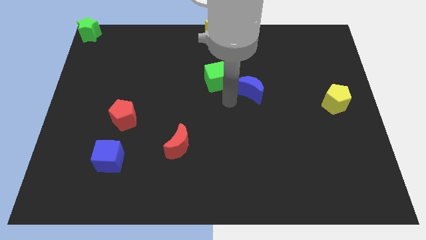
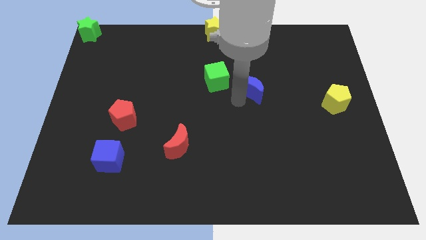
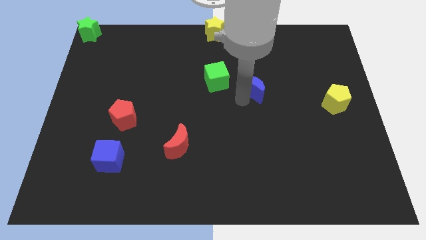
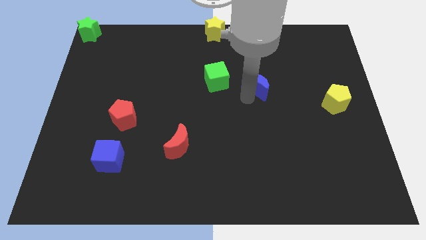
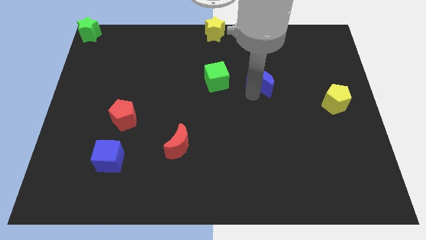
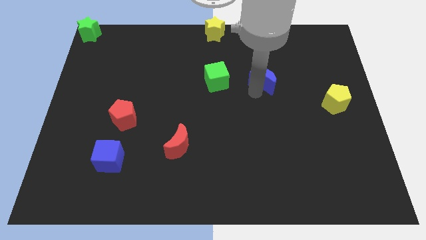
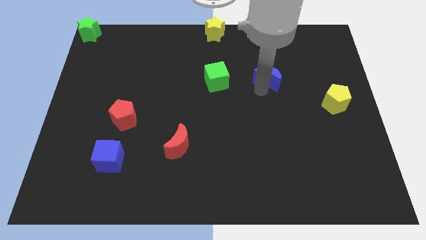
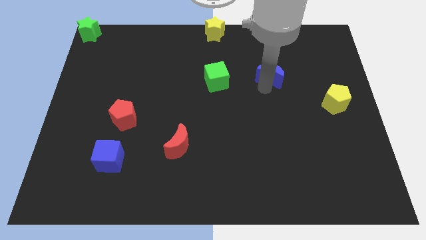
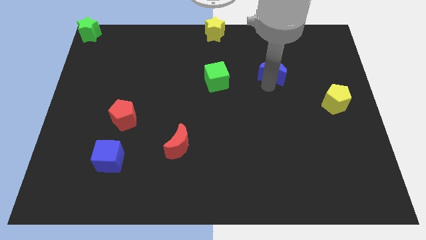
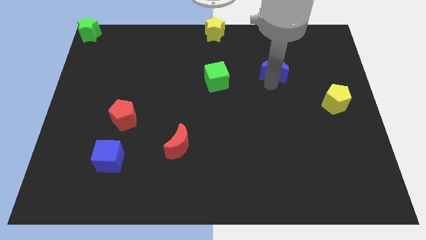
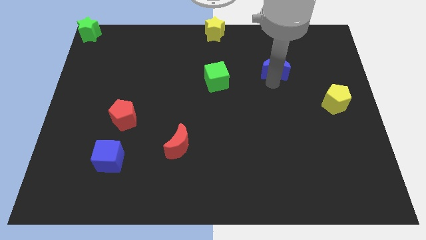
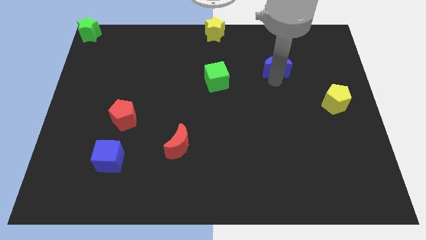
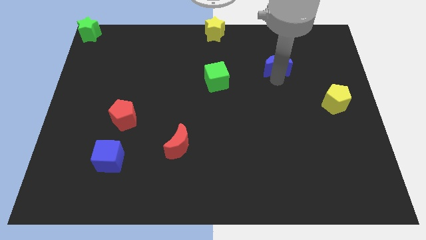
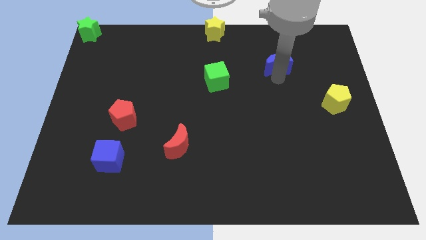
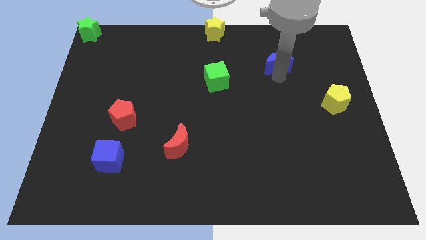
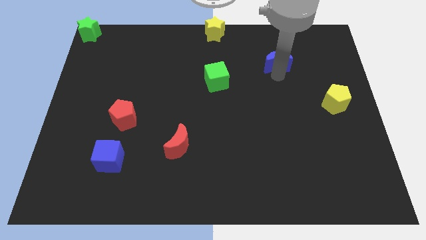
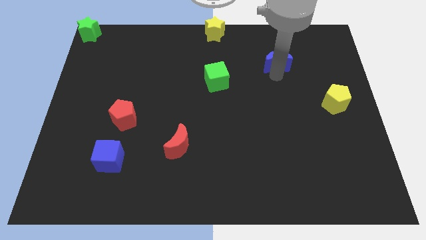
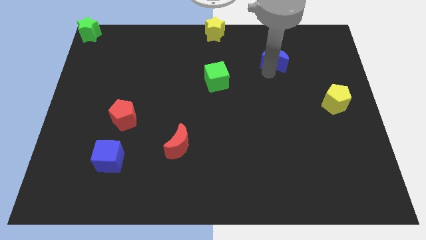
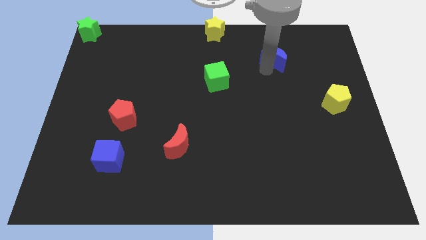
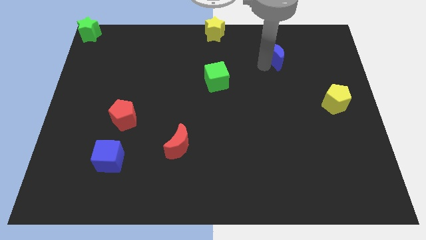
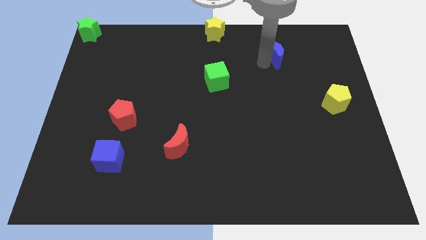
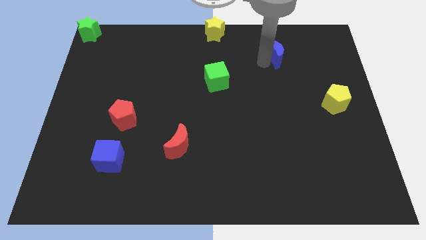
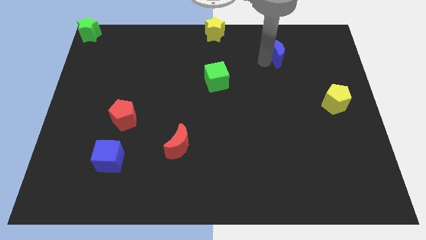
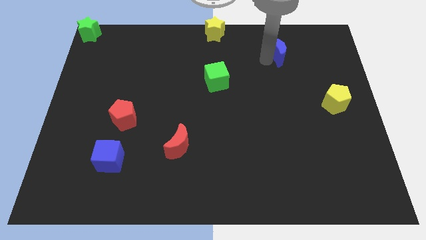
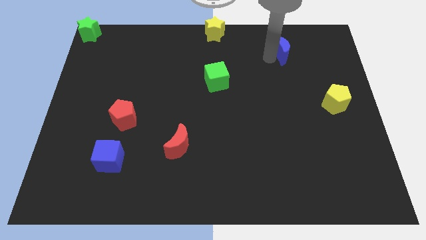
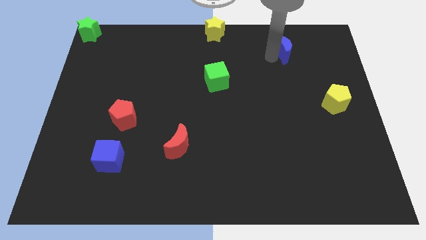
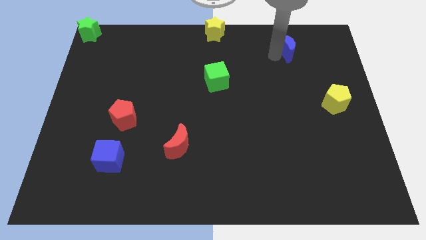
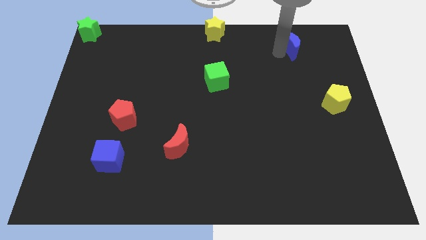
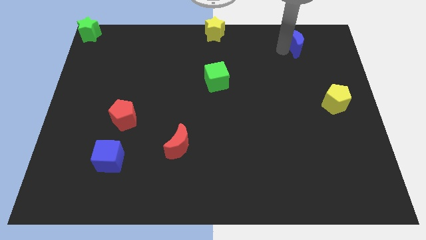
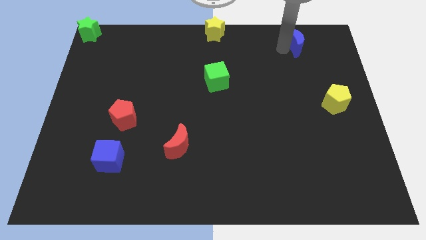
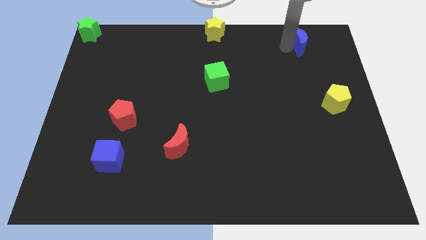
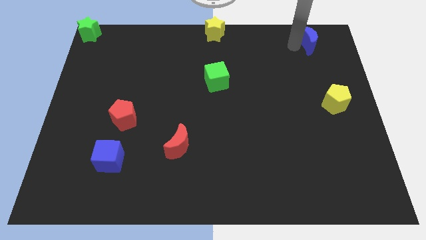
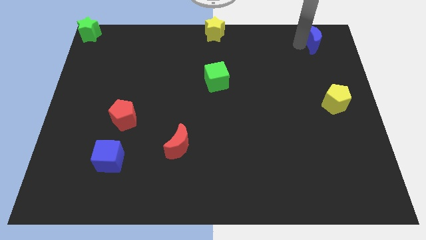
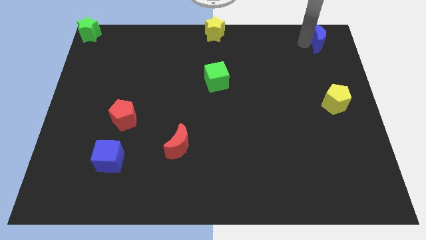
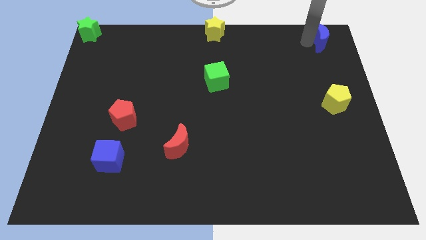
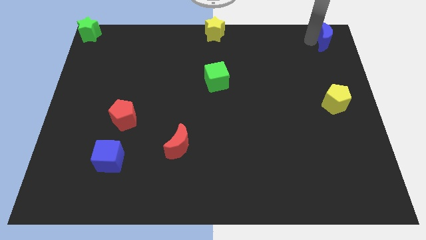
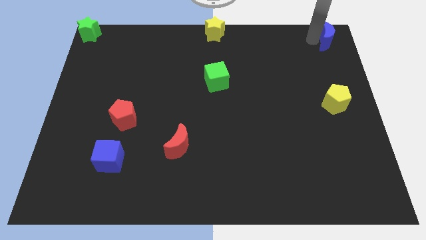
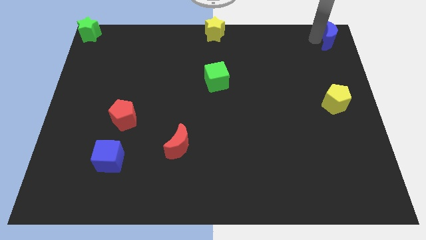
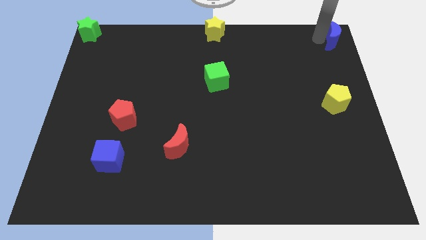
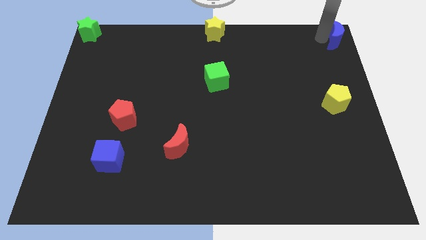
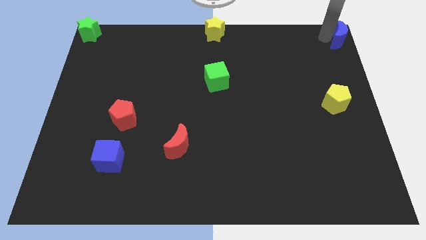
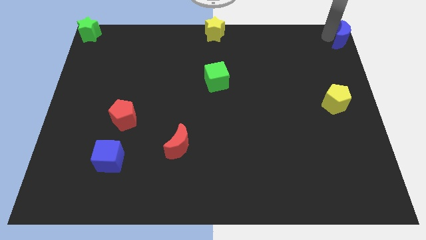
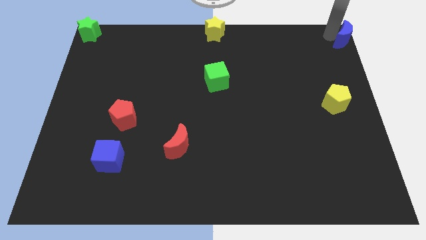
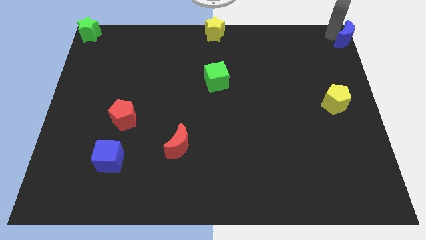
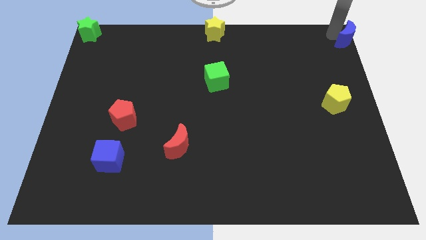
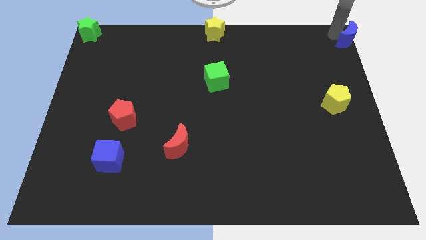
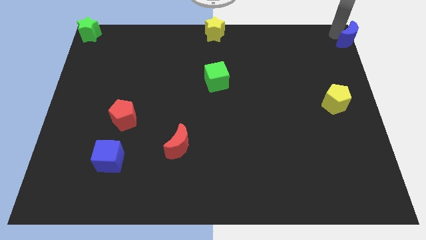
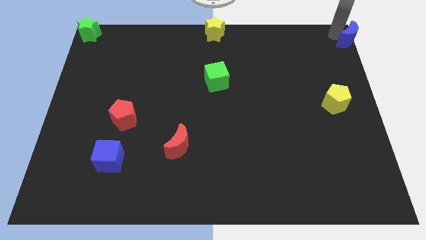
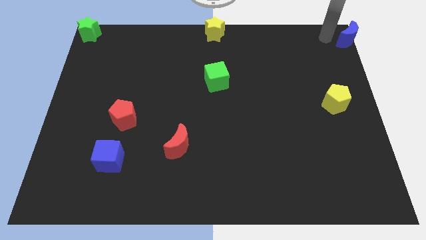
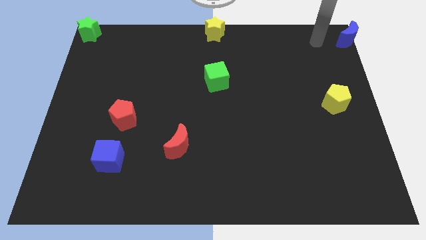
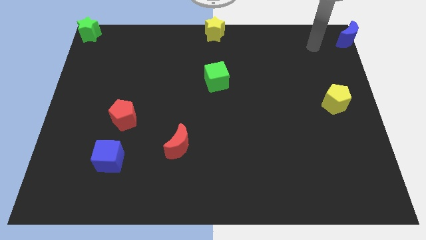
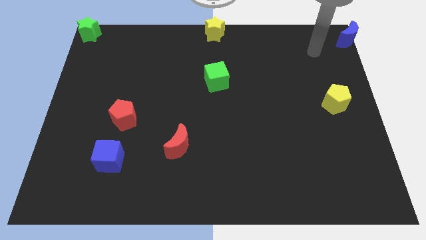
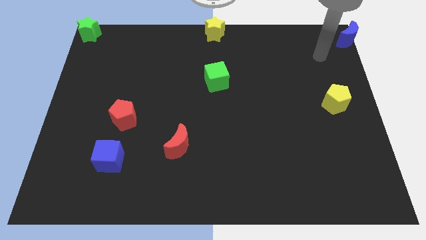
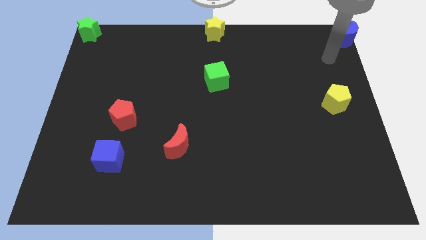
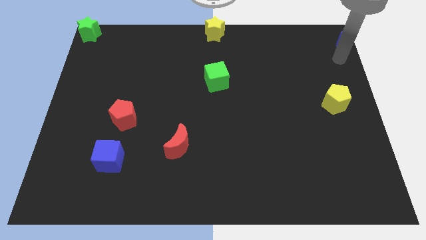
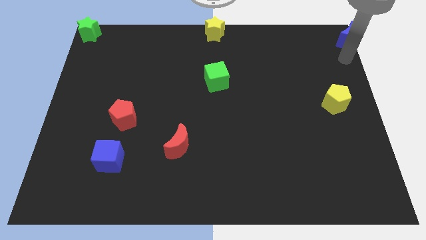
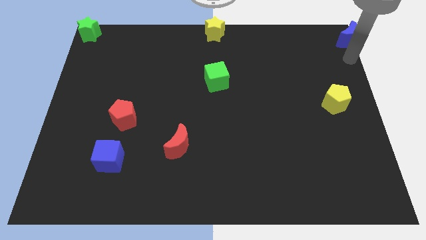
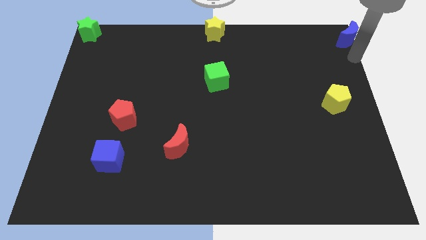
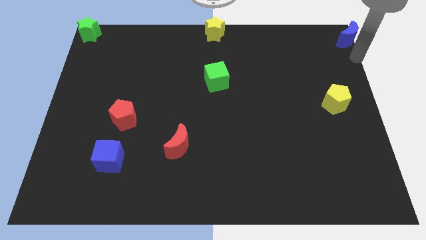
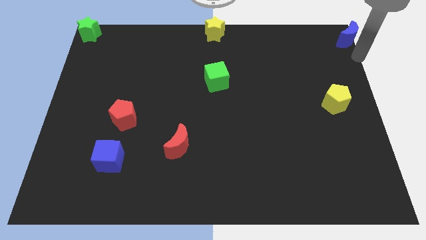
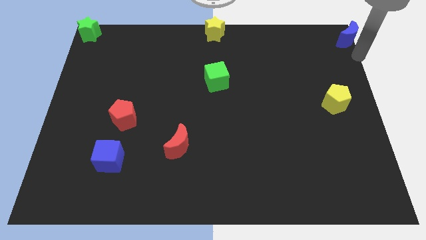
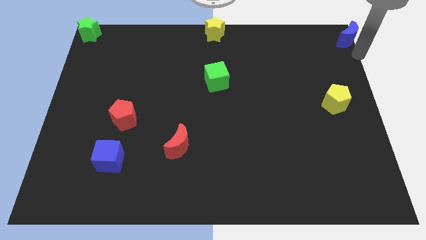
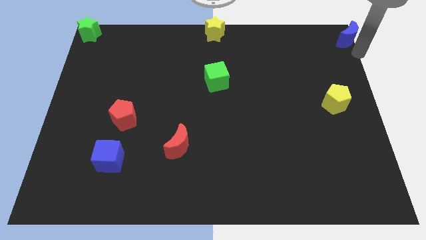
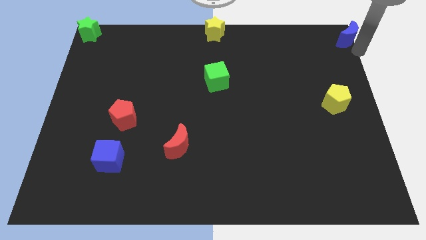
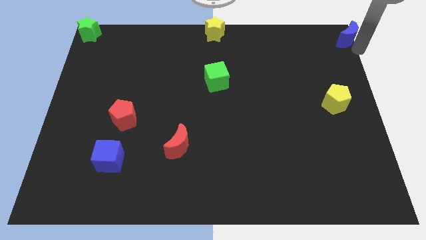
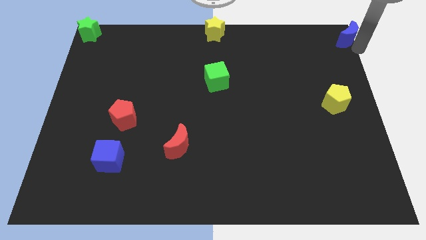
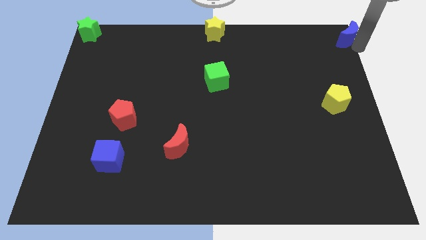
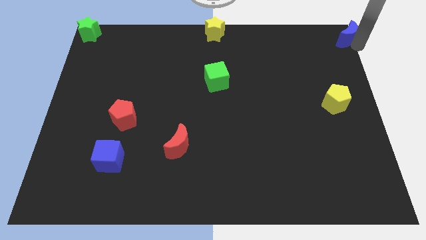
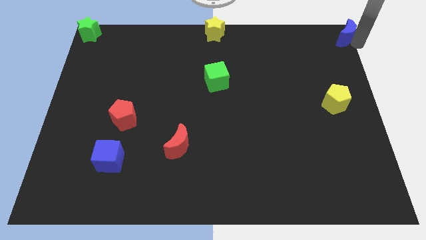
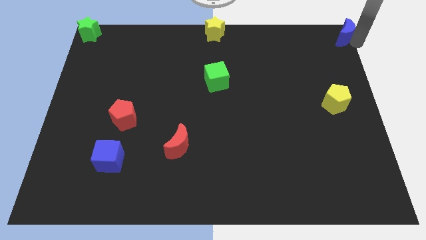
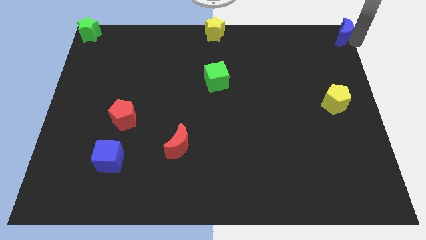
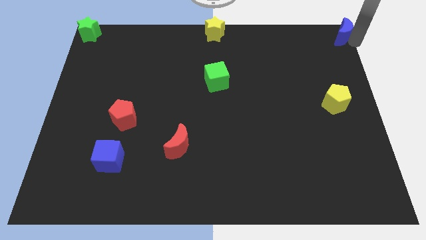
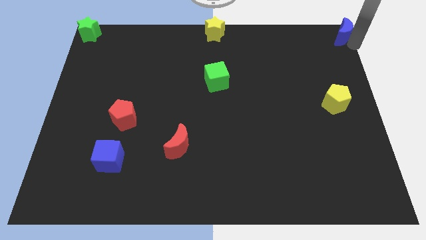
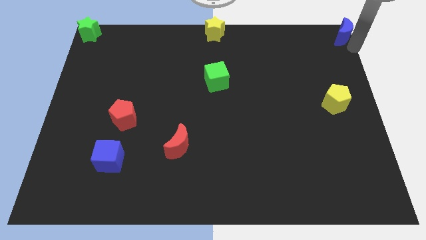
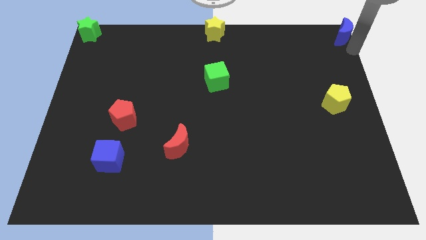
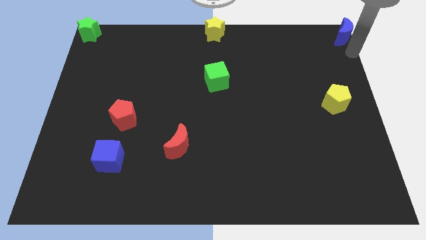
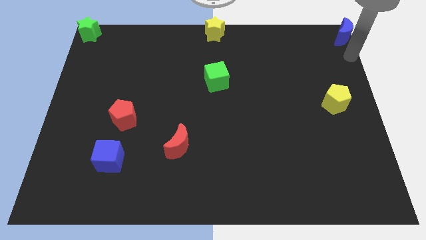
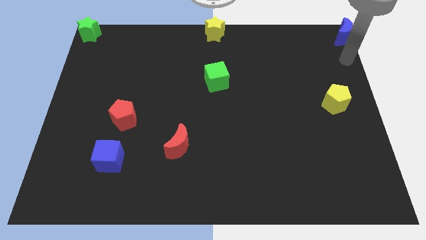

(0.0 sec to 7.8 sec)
move the blue moon to the top right corner

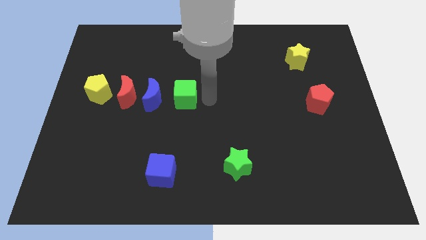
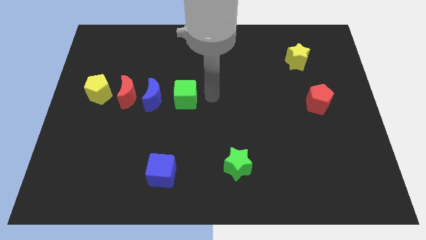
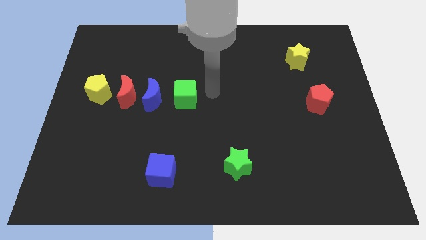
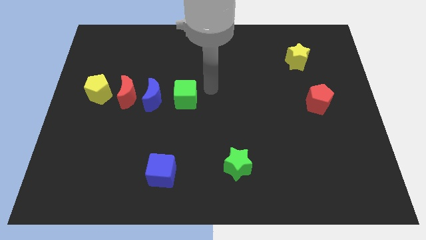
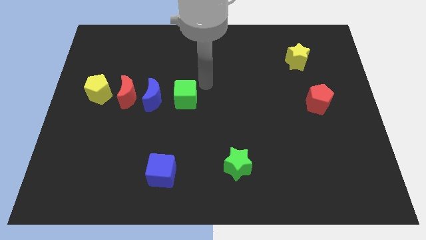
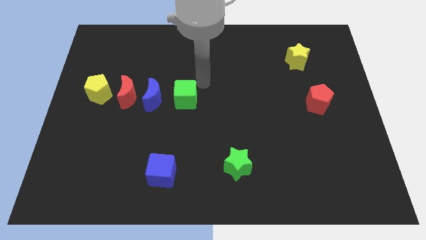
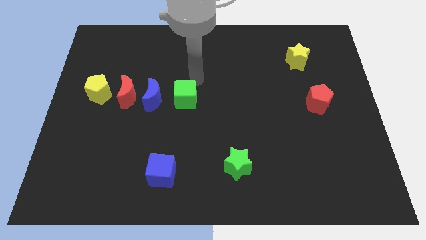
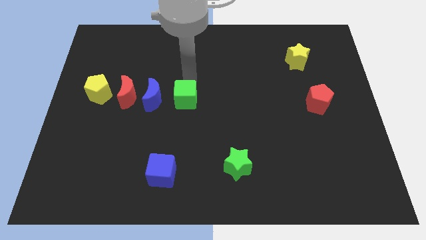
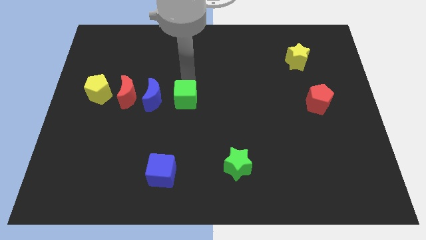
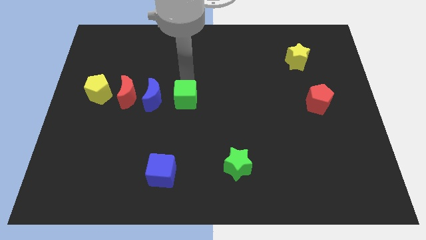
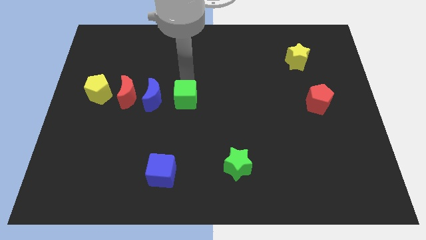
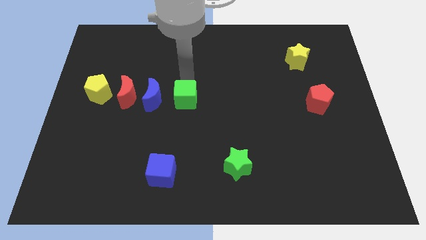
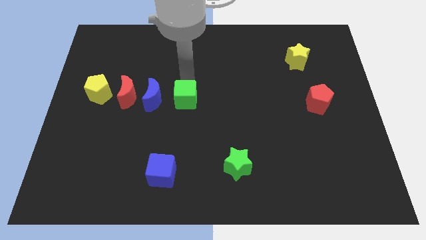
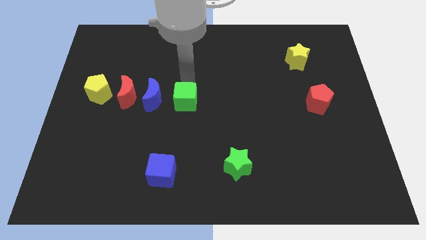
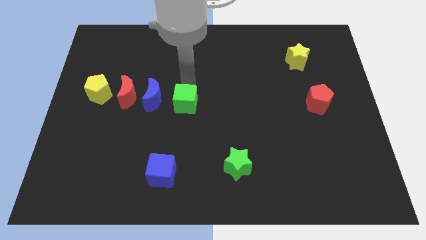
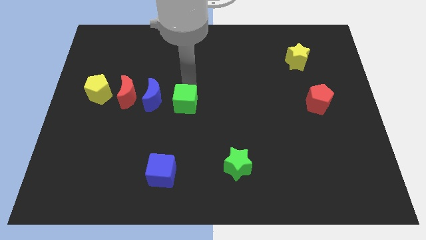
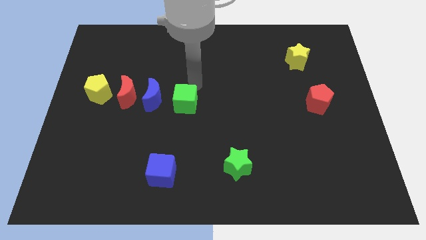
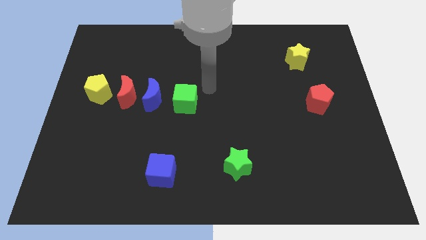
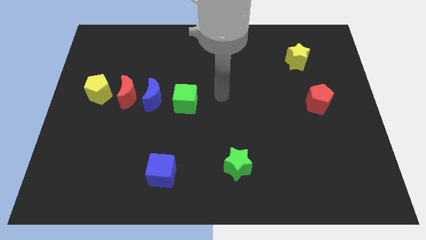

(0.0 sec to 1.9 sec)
place the green cube properly so that it should form a line with remaining three blocks
